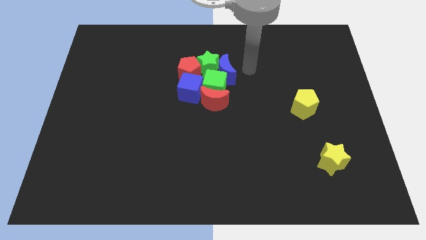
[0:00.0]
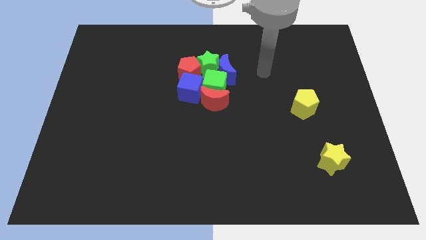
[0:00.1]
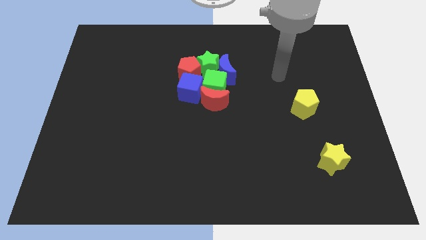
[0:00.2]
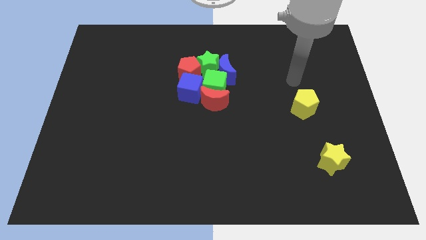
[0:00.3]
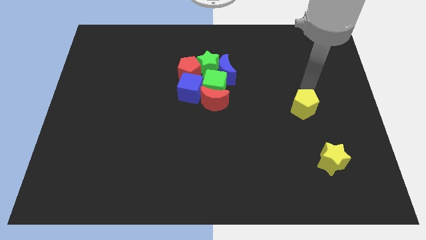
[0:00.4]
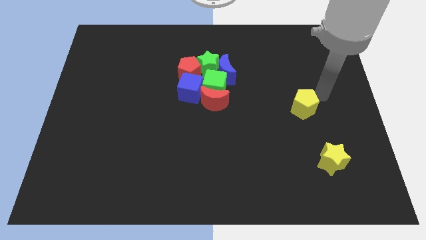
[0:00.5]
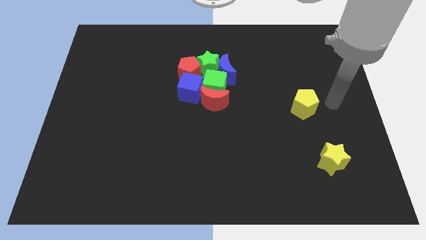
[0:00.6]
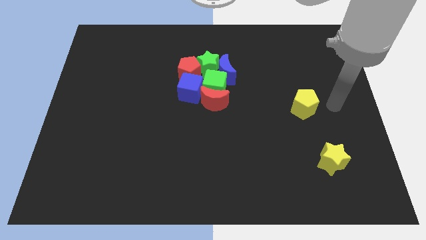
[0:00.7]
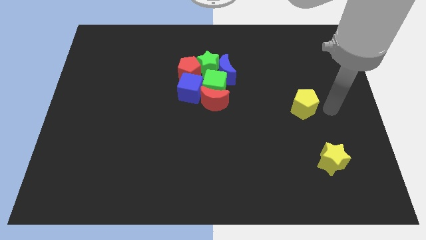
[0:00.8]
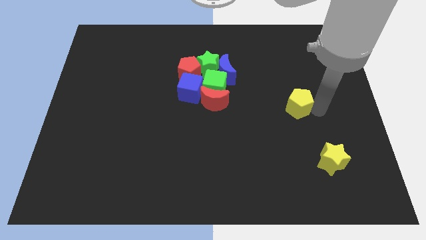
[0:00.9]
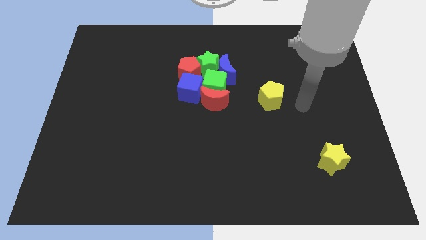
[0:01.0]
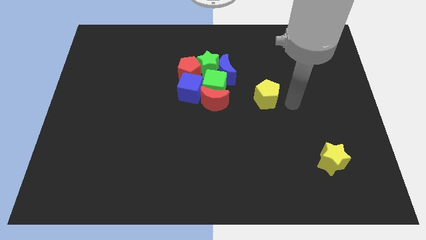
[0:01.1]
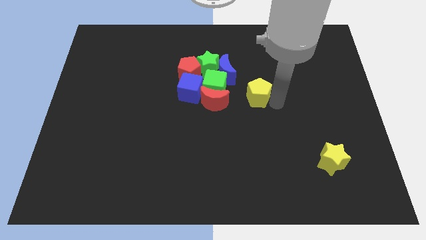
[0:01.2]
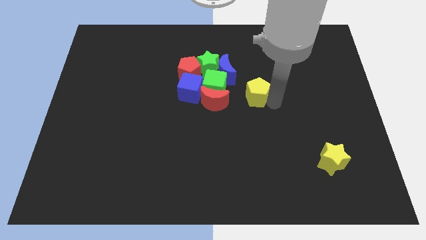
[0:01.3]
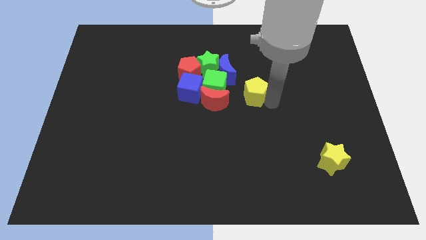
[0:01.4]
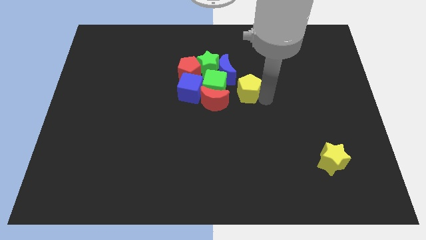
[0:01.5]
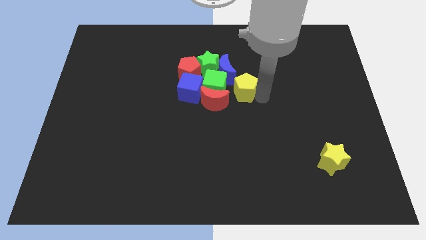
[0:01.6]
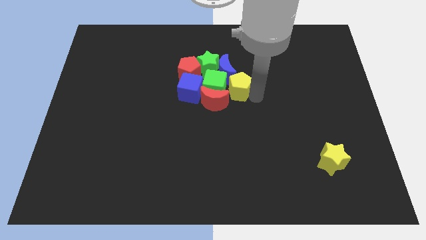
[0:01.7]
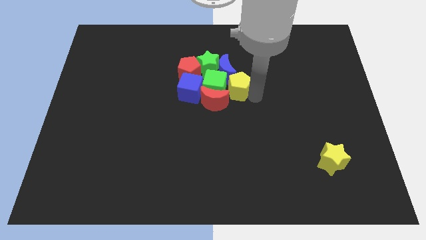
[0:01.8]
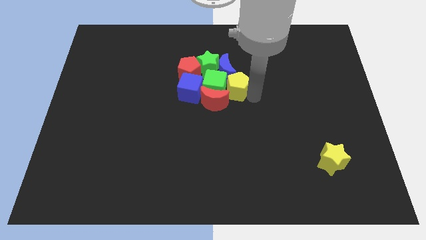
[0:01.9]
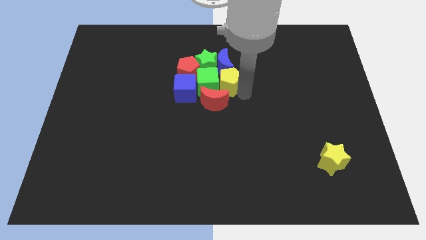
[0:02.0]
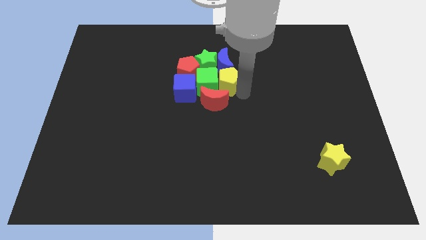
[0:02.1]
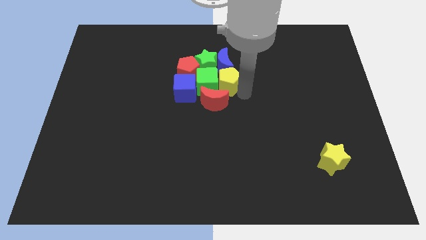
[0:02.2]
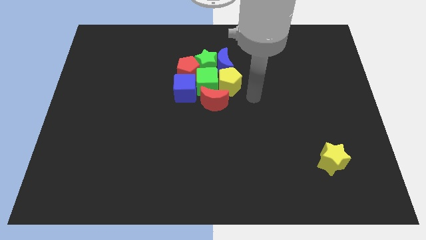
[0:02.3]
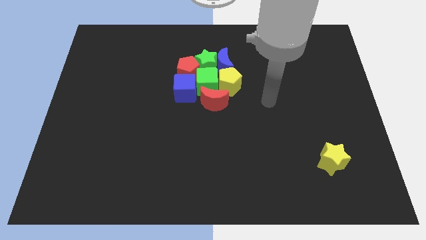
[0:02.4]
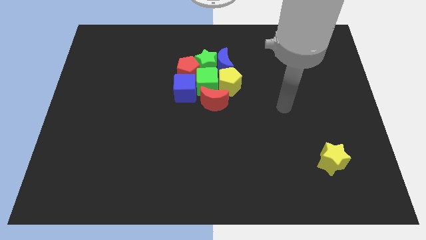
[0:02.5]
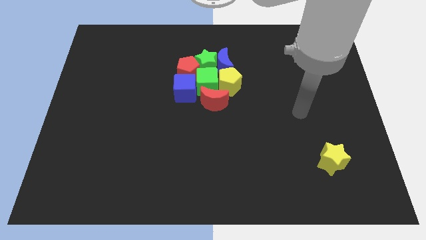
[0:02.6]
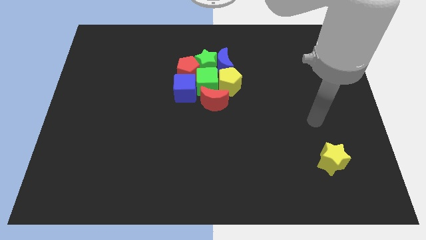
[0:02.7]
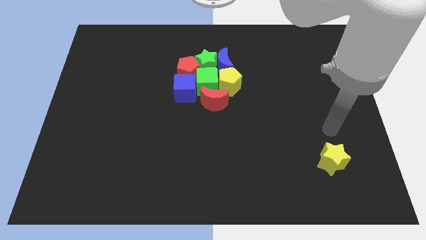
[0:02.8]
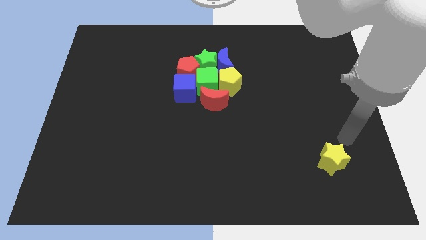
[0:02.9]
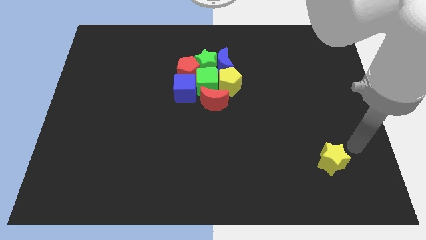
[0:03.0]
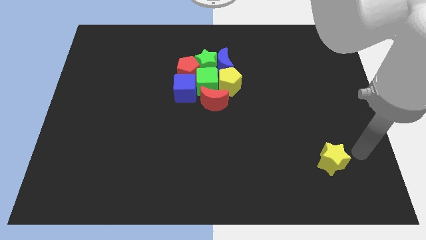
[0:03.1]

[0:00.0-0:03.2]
place the yellow pentagon to the bottom of the blue moon

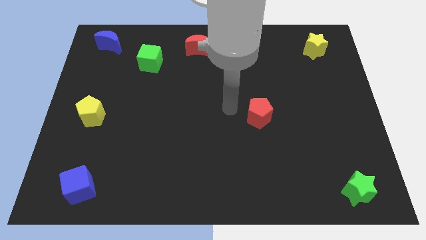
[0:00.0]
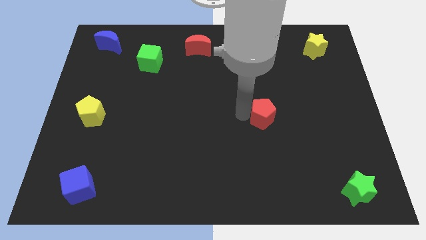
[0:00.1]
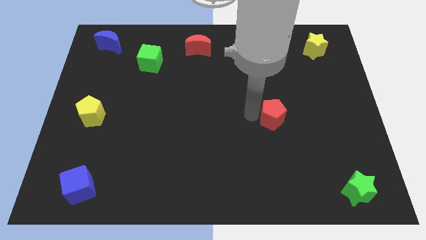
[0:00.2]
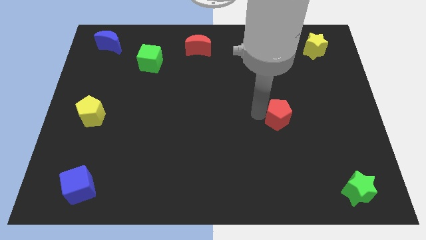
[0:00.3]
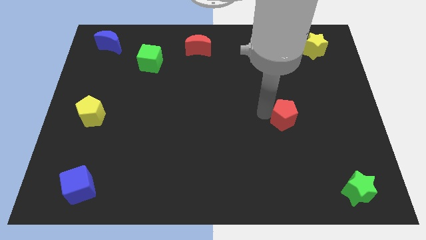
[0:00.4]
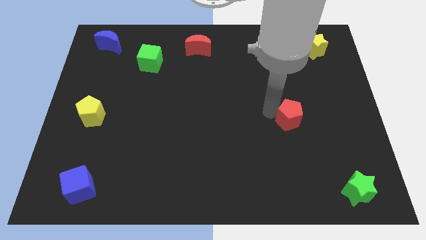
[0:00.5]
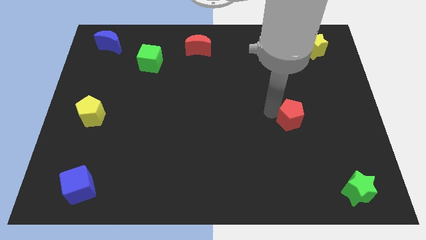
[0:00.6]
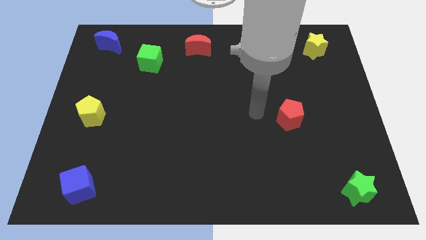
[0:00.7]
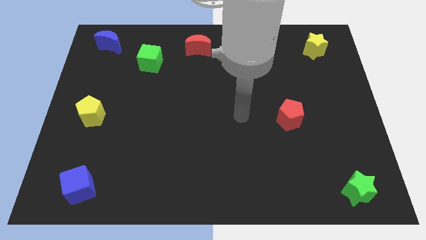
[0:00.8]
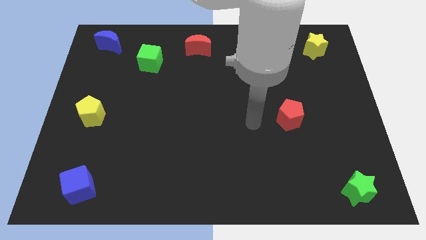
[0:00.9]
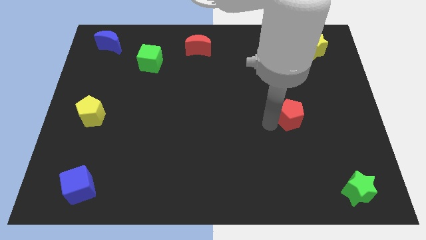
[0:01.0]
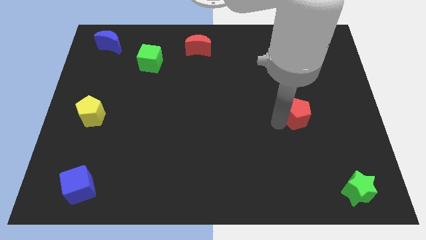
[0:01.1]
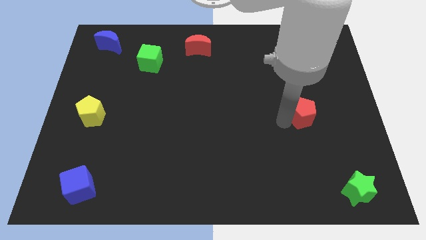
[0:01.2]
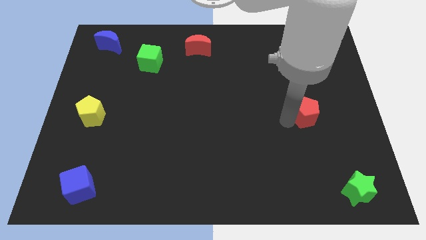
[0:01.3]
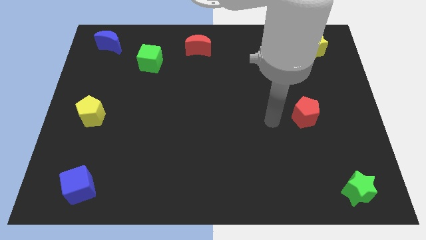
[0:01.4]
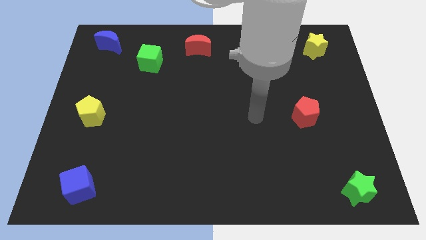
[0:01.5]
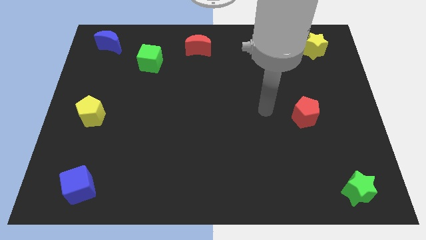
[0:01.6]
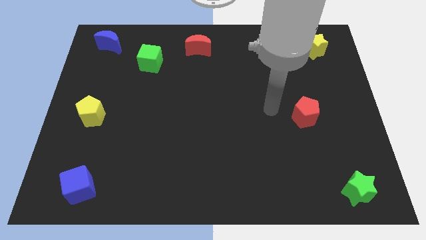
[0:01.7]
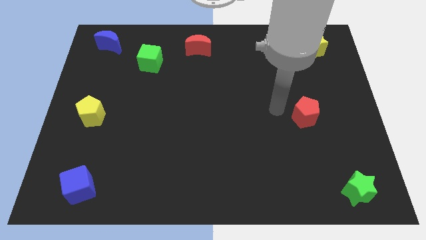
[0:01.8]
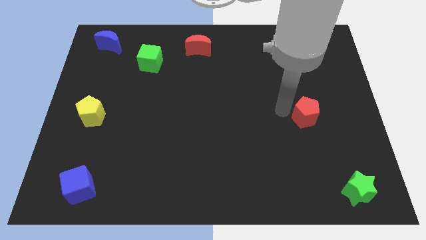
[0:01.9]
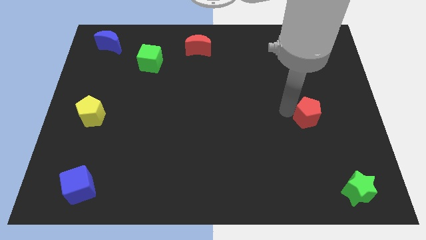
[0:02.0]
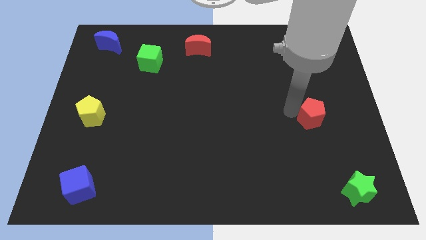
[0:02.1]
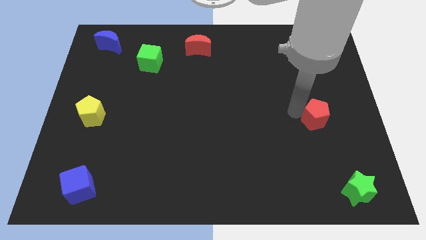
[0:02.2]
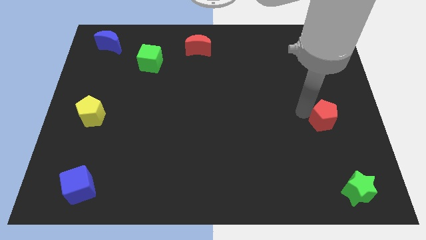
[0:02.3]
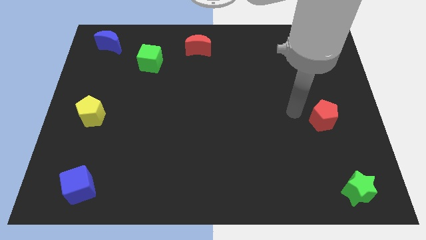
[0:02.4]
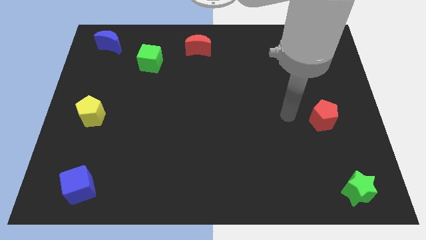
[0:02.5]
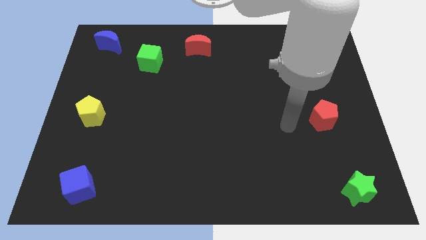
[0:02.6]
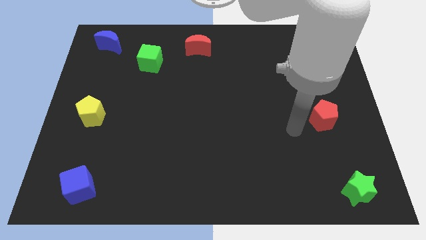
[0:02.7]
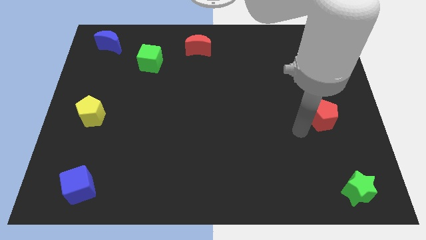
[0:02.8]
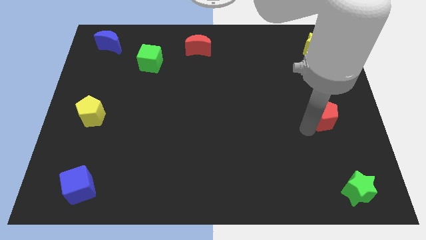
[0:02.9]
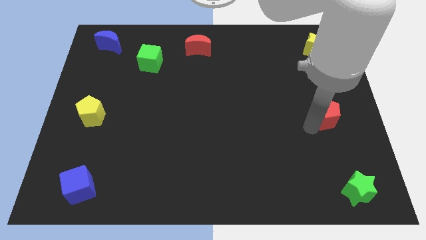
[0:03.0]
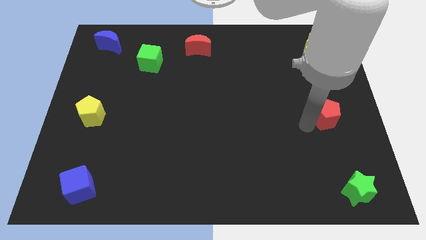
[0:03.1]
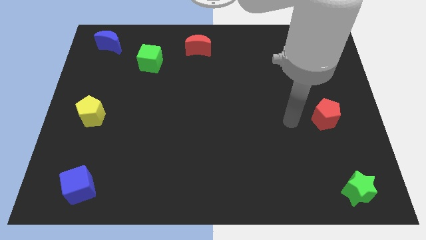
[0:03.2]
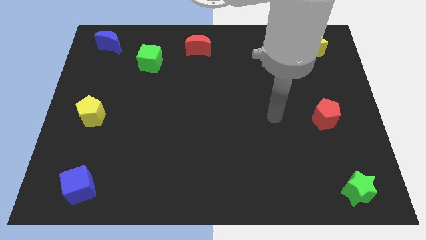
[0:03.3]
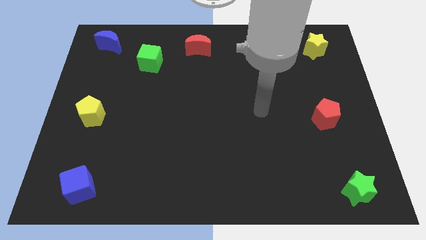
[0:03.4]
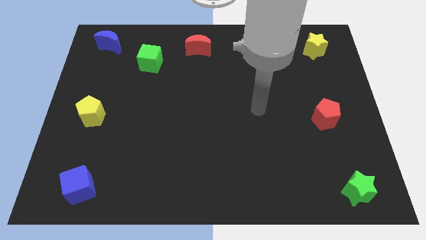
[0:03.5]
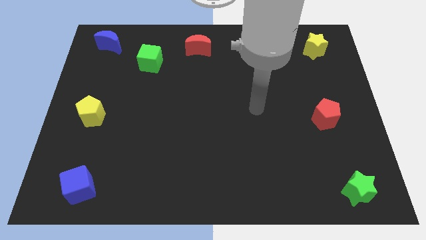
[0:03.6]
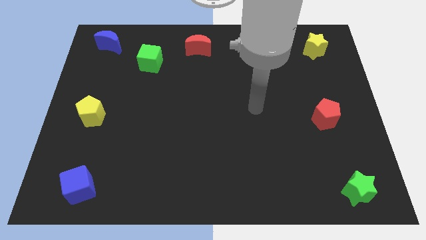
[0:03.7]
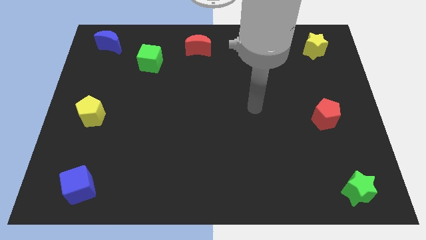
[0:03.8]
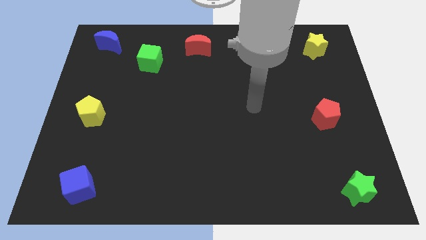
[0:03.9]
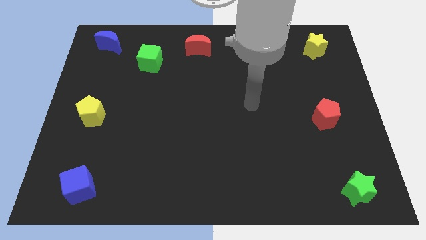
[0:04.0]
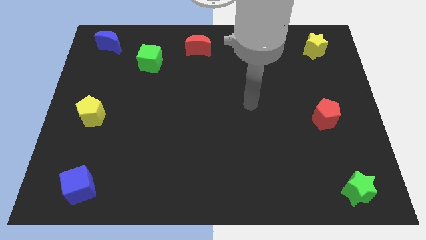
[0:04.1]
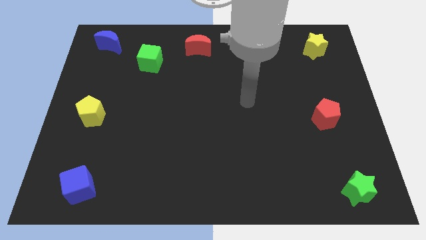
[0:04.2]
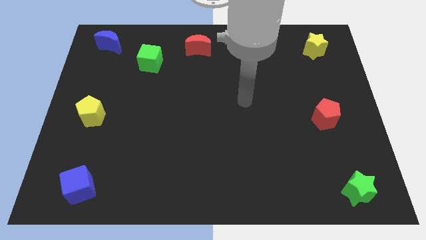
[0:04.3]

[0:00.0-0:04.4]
move the red pentagon towards the right center of the board

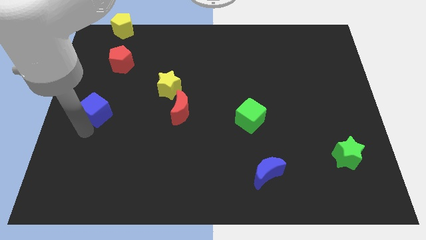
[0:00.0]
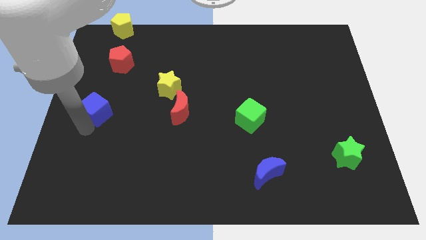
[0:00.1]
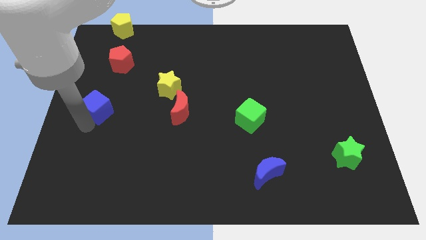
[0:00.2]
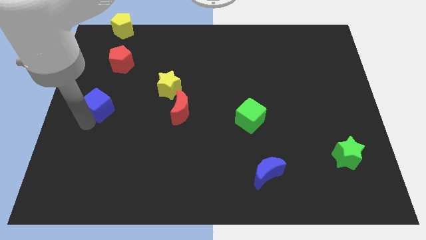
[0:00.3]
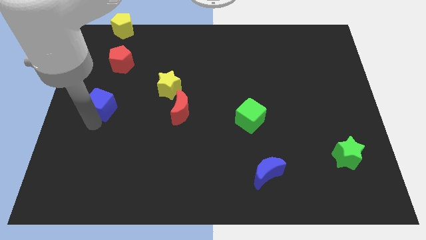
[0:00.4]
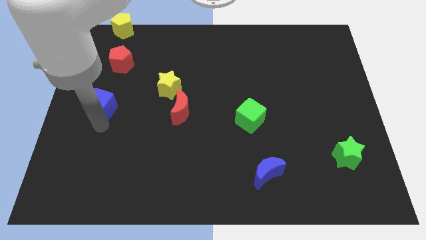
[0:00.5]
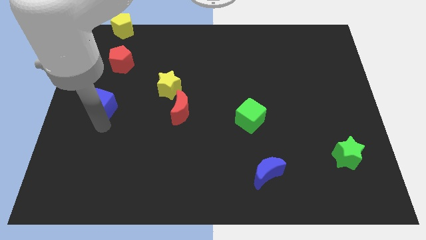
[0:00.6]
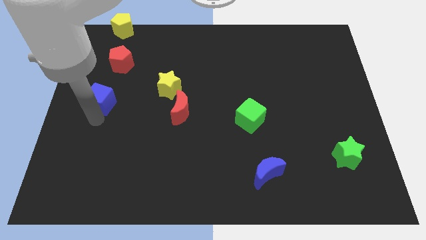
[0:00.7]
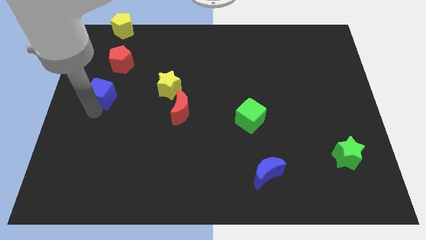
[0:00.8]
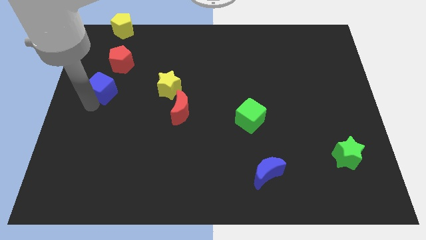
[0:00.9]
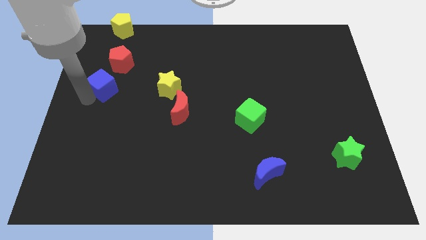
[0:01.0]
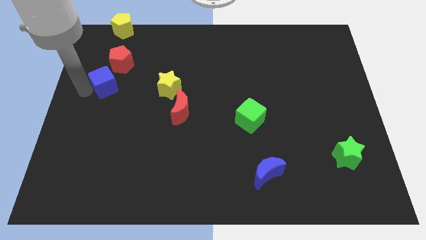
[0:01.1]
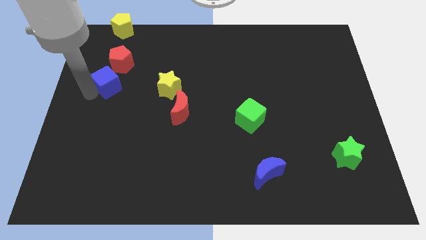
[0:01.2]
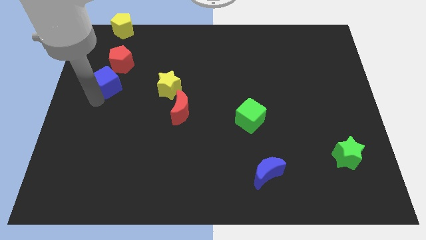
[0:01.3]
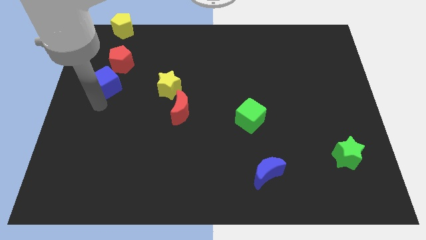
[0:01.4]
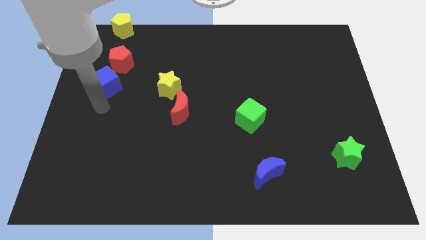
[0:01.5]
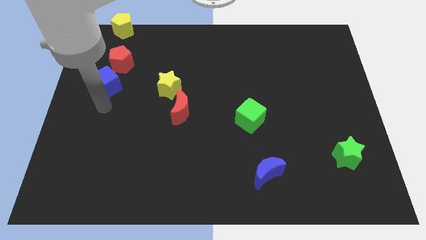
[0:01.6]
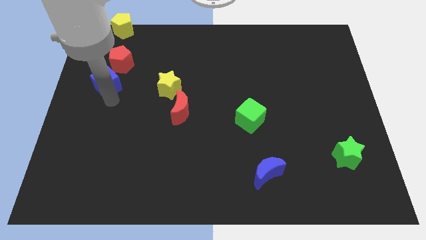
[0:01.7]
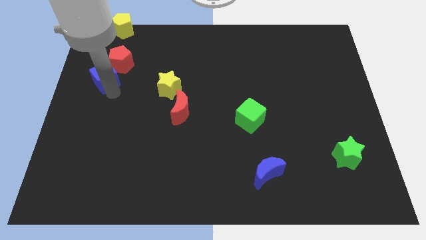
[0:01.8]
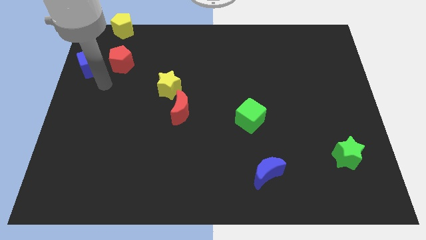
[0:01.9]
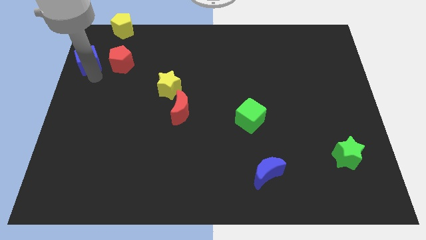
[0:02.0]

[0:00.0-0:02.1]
place blue cube beside red pentagon
